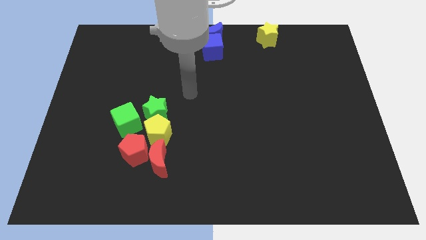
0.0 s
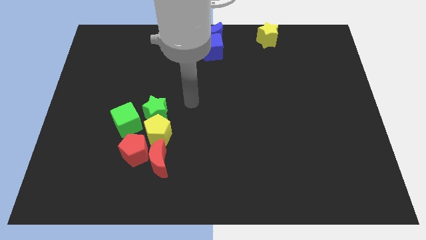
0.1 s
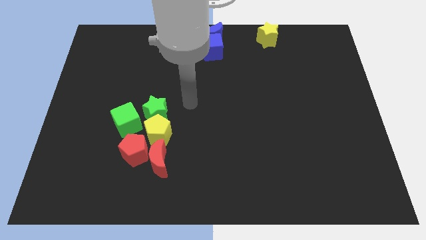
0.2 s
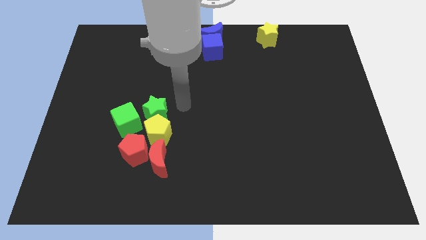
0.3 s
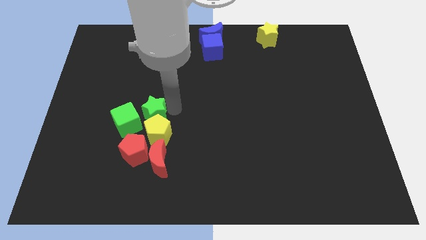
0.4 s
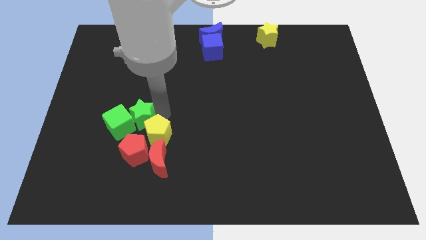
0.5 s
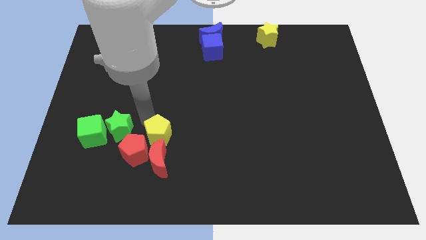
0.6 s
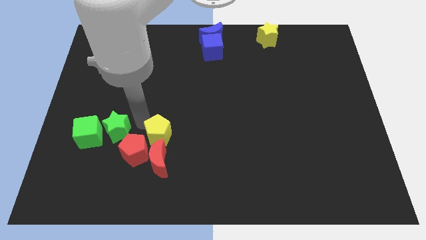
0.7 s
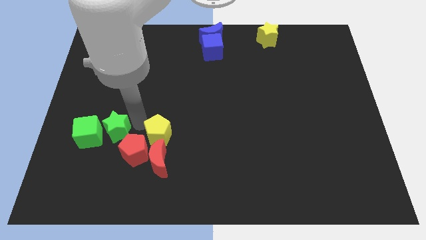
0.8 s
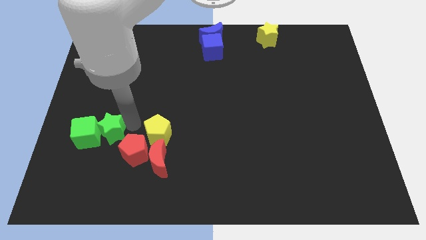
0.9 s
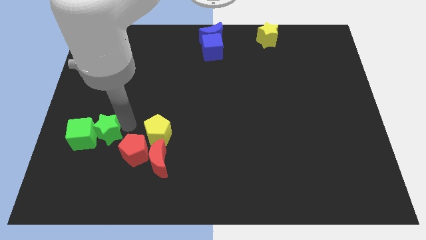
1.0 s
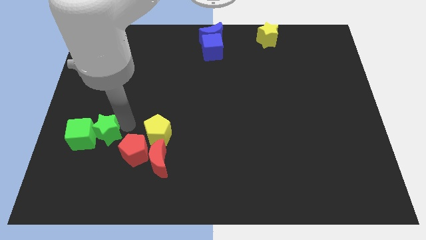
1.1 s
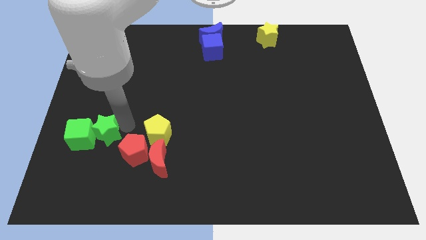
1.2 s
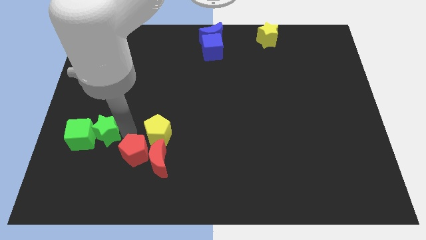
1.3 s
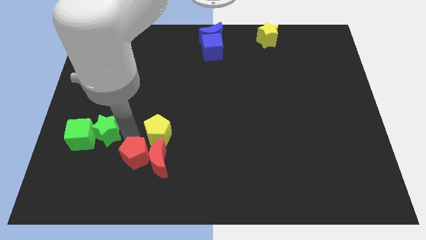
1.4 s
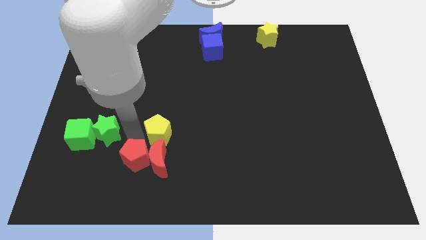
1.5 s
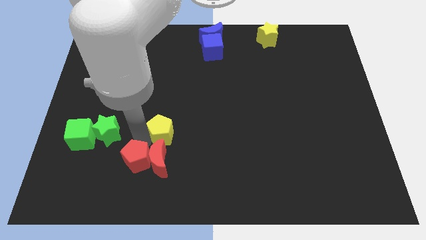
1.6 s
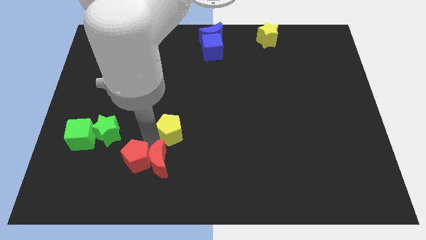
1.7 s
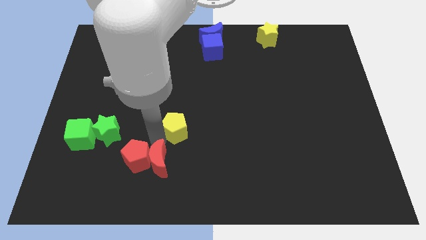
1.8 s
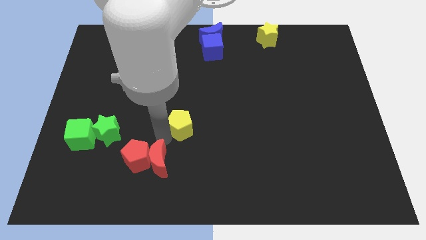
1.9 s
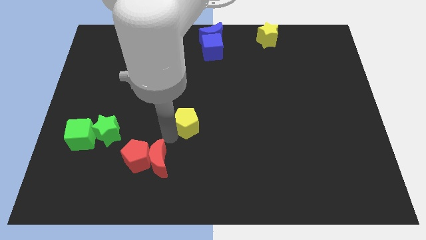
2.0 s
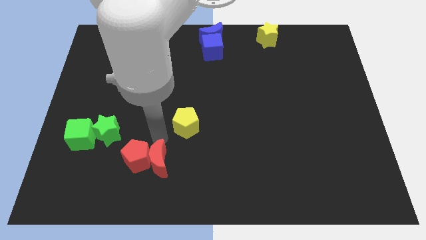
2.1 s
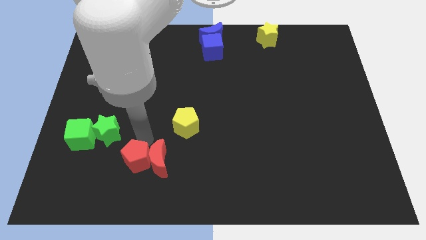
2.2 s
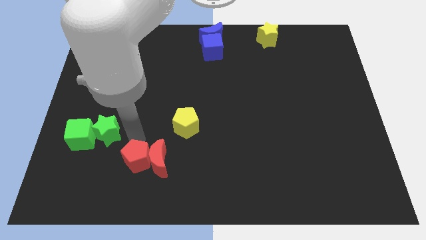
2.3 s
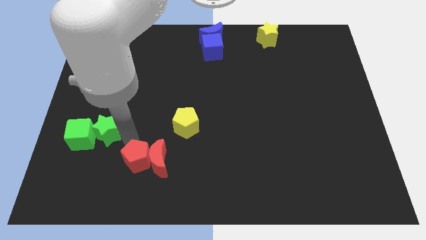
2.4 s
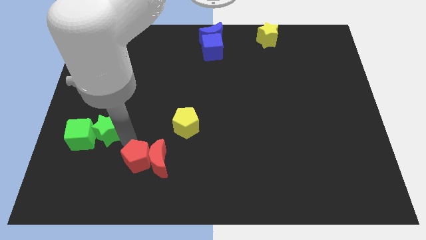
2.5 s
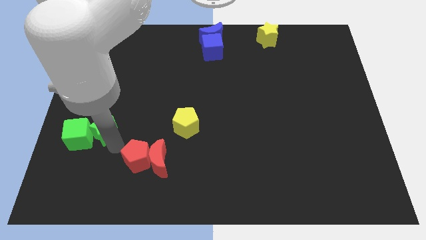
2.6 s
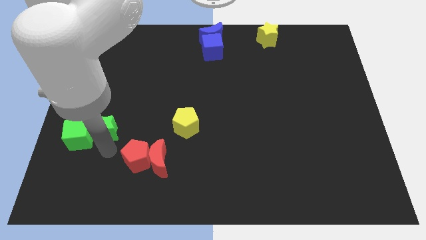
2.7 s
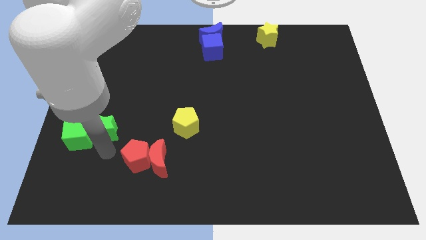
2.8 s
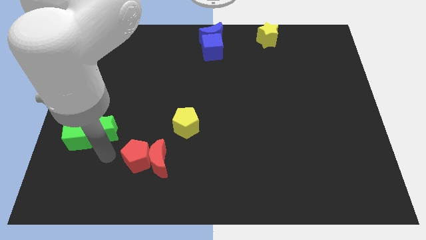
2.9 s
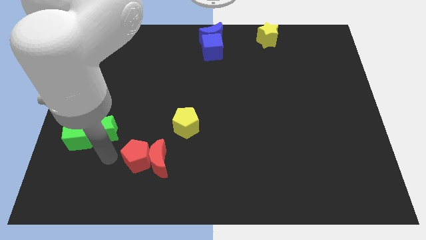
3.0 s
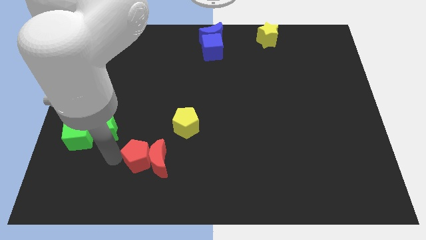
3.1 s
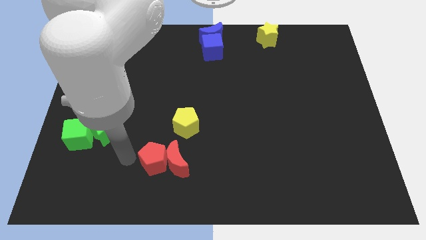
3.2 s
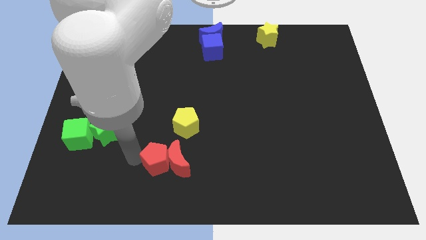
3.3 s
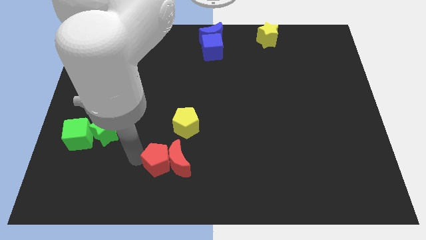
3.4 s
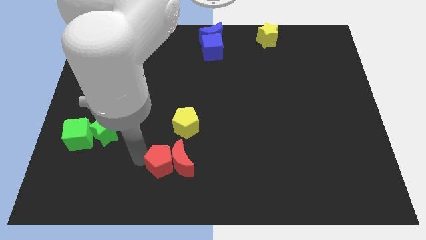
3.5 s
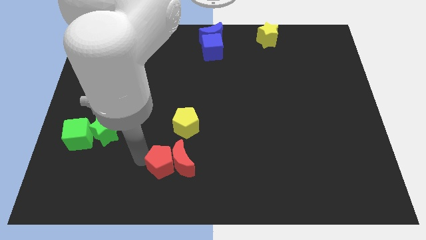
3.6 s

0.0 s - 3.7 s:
separate yellow pentagon from red moon

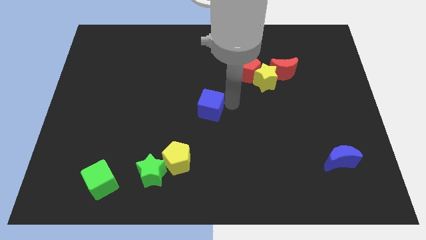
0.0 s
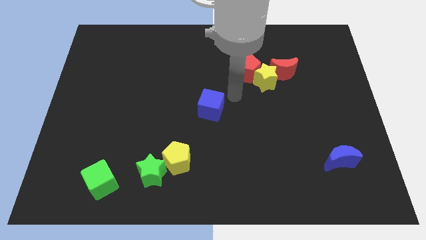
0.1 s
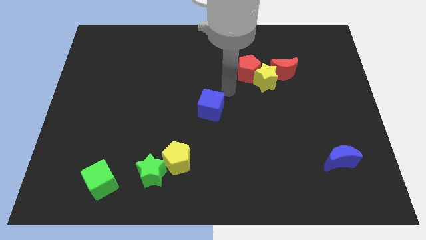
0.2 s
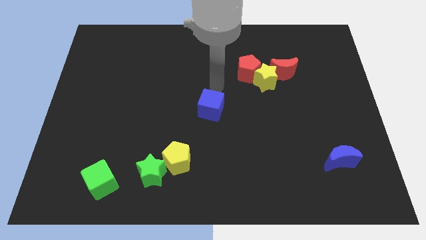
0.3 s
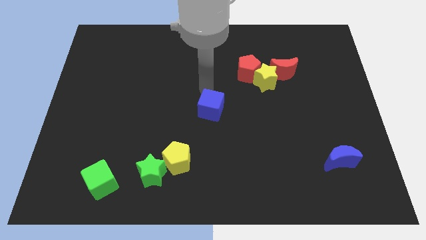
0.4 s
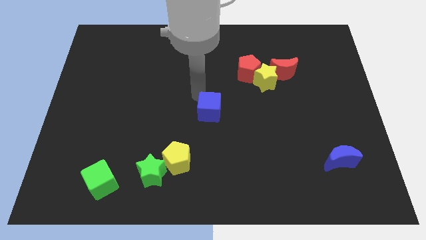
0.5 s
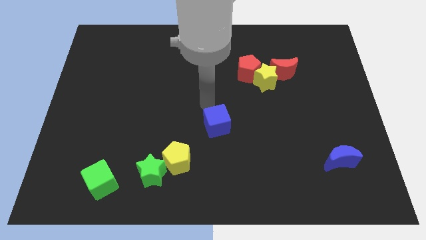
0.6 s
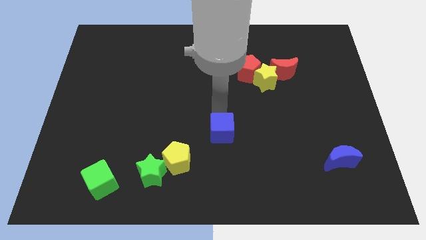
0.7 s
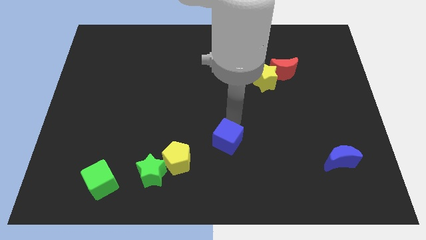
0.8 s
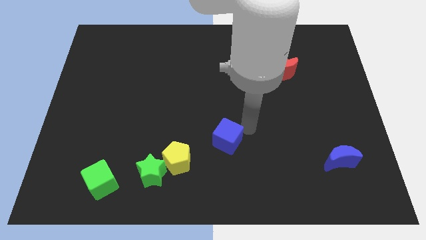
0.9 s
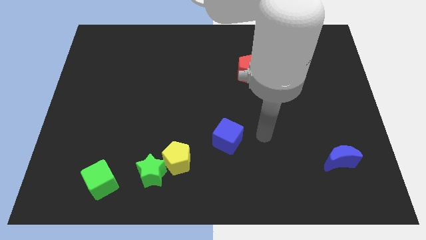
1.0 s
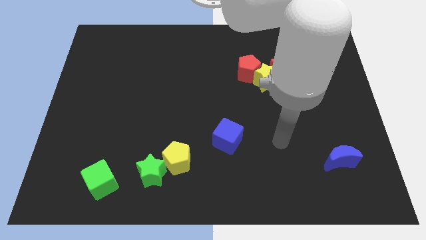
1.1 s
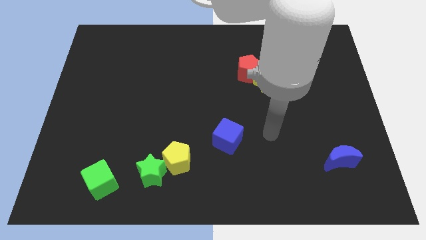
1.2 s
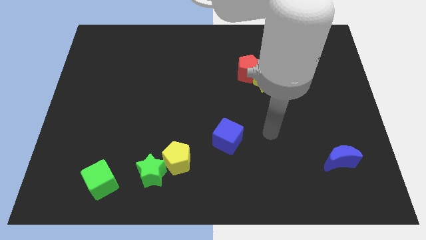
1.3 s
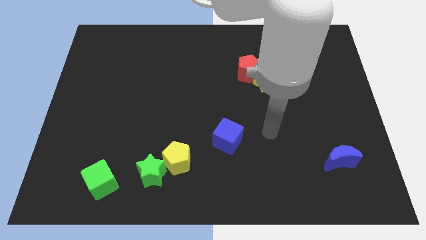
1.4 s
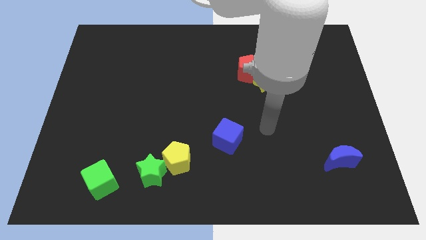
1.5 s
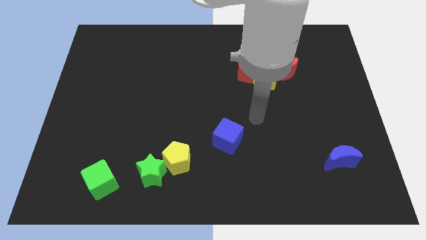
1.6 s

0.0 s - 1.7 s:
move the blue cube diagonally to the yellow pentagon

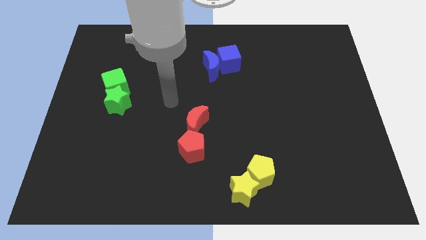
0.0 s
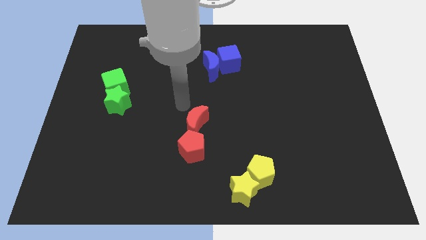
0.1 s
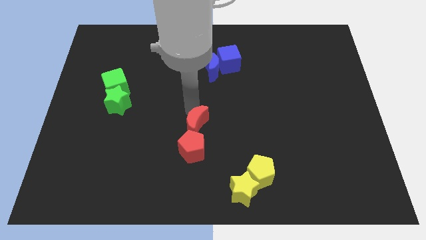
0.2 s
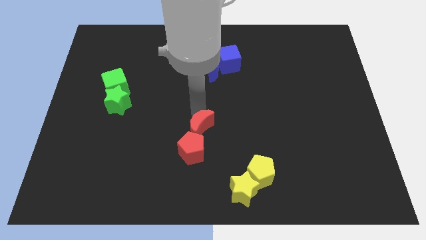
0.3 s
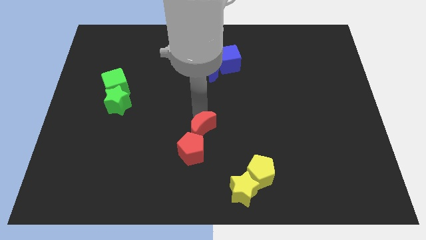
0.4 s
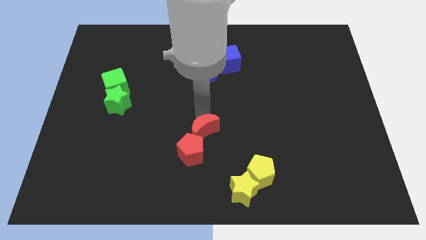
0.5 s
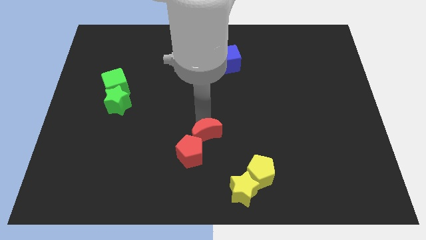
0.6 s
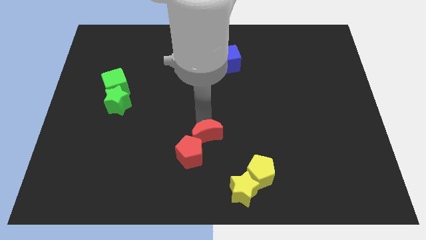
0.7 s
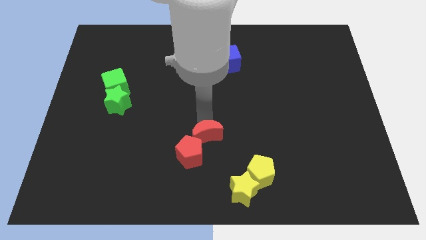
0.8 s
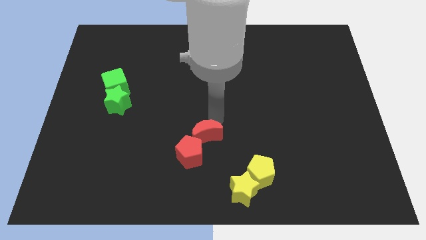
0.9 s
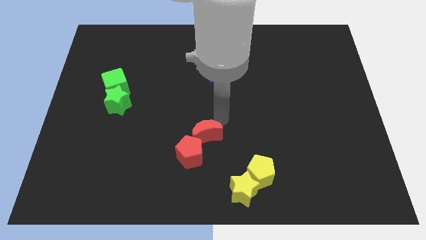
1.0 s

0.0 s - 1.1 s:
push the red moon to the top right side of the red pentagon

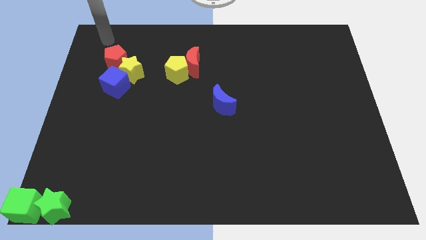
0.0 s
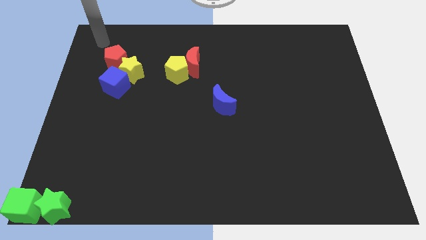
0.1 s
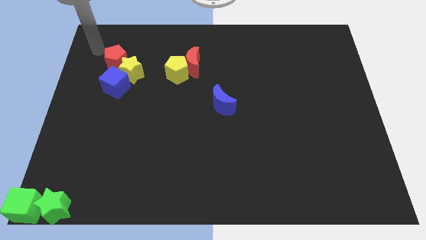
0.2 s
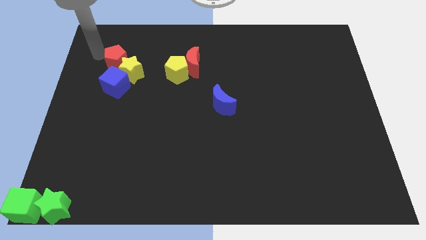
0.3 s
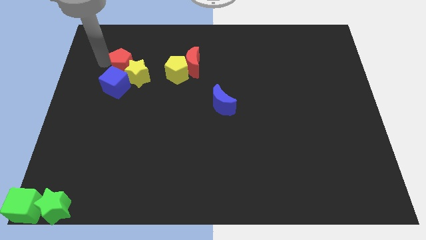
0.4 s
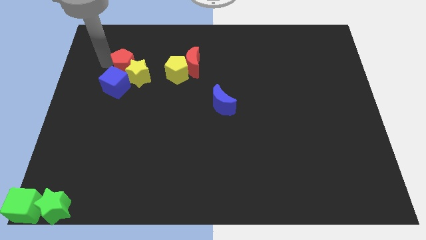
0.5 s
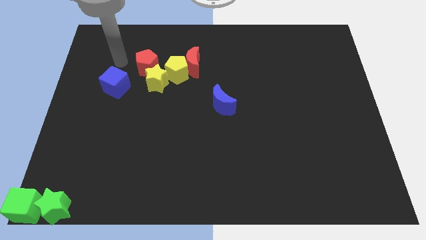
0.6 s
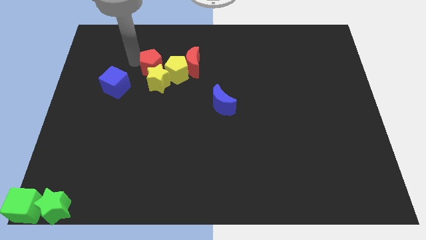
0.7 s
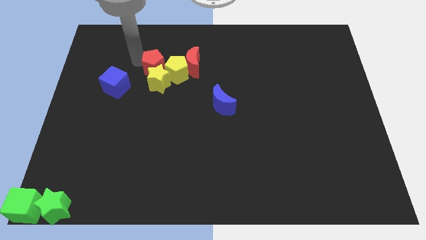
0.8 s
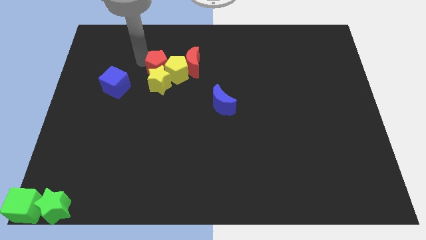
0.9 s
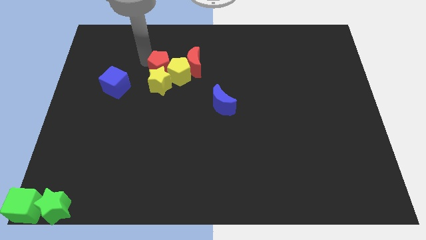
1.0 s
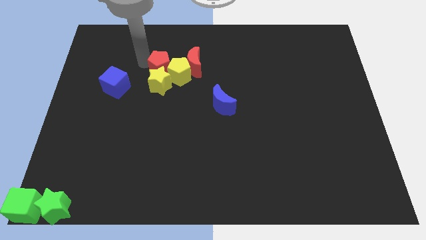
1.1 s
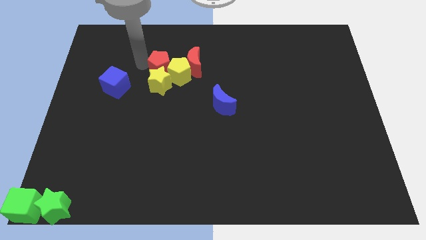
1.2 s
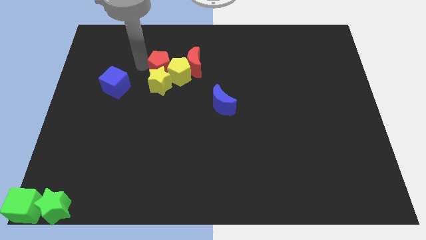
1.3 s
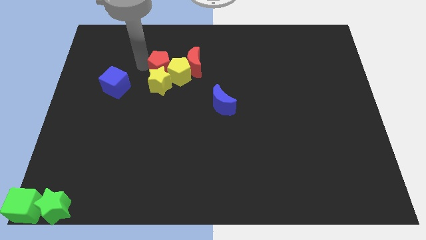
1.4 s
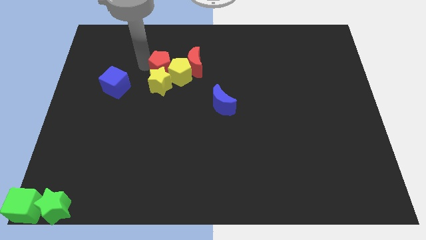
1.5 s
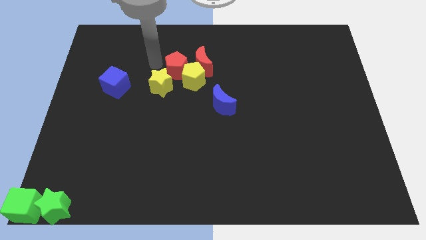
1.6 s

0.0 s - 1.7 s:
move the red pentagon and the yellow star away from the blue cube

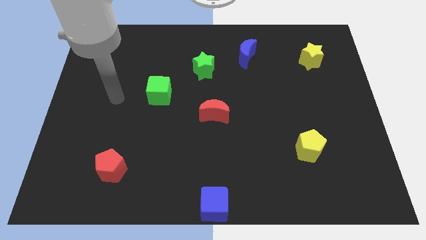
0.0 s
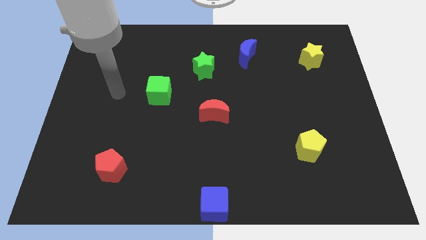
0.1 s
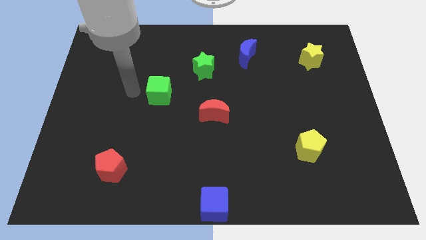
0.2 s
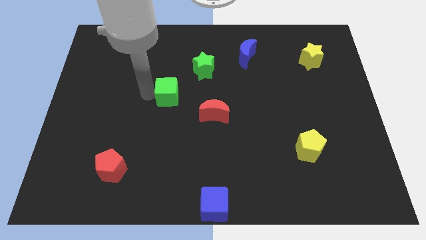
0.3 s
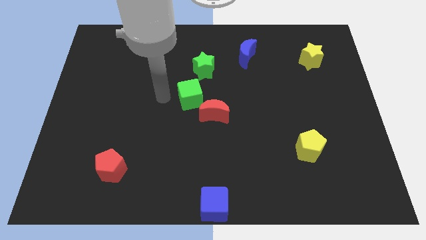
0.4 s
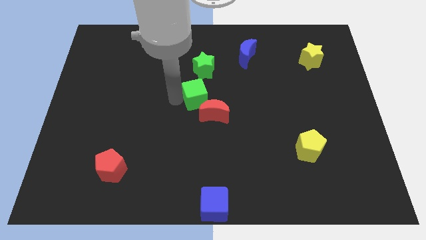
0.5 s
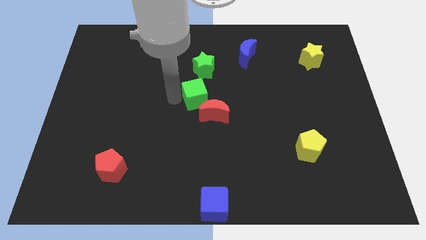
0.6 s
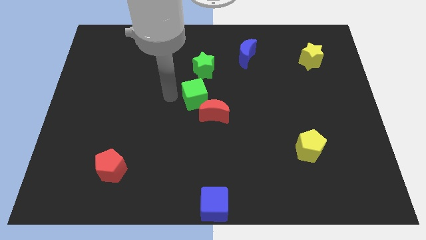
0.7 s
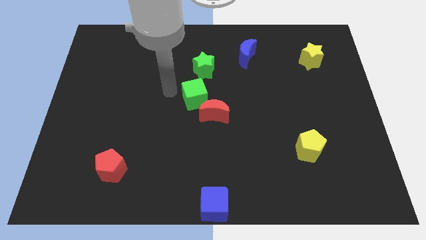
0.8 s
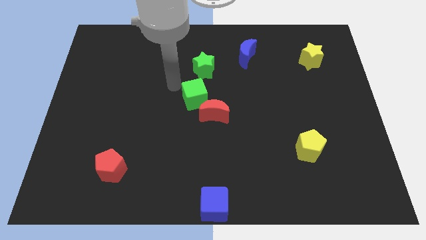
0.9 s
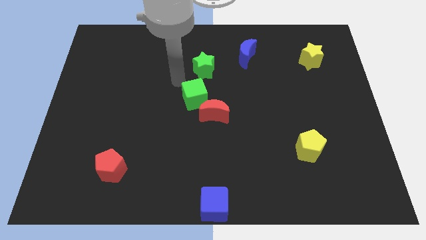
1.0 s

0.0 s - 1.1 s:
move the green cube close to the red crescent
